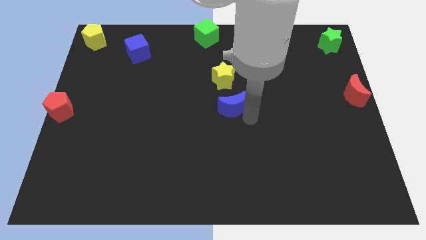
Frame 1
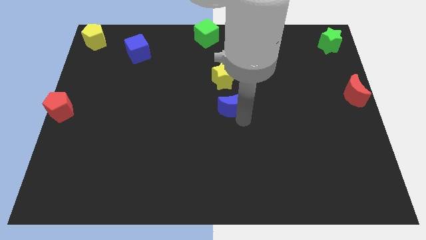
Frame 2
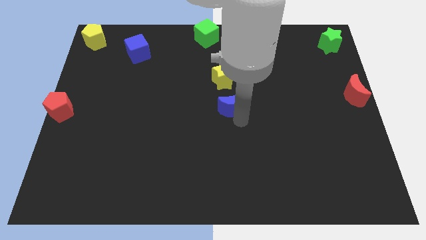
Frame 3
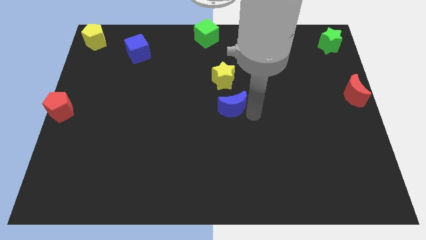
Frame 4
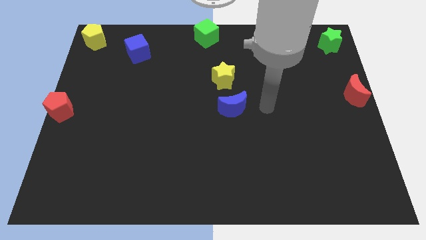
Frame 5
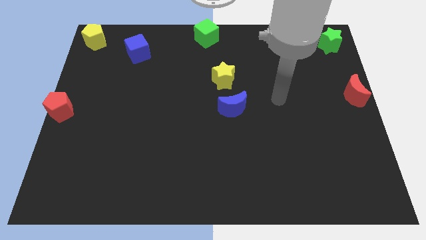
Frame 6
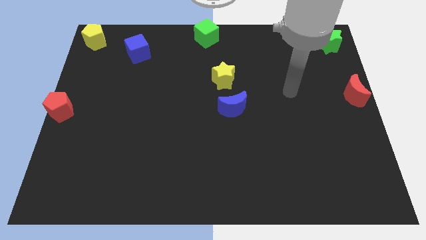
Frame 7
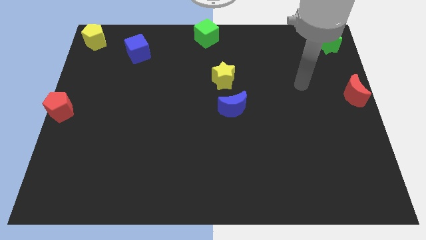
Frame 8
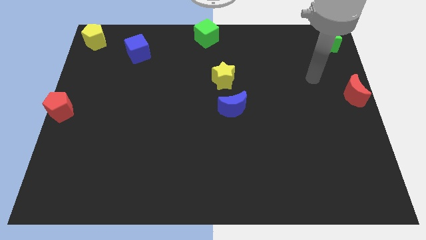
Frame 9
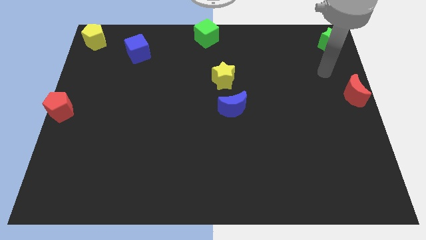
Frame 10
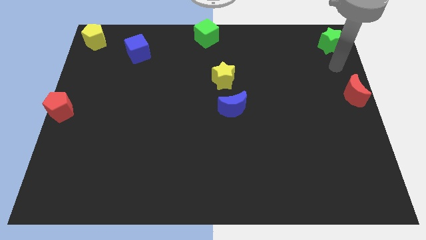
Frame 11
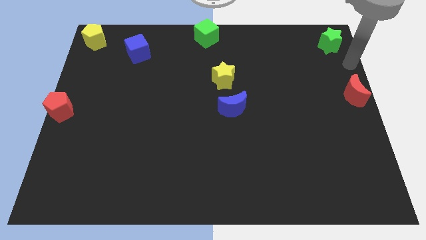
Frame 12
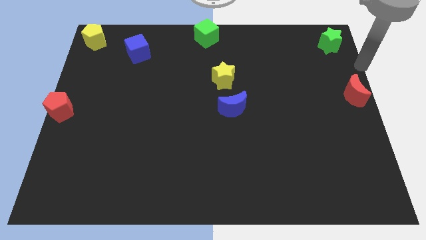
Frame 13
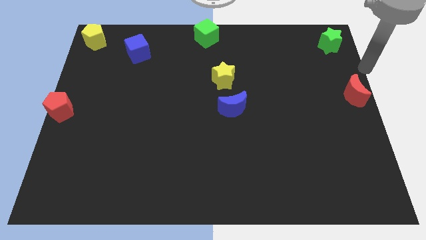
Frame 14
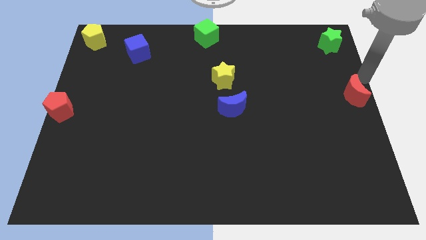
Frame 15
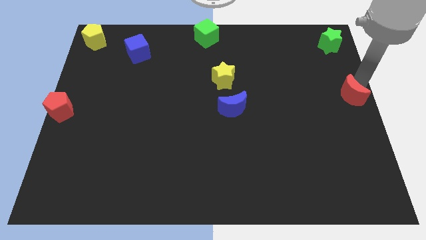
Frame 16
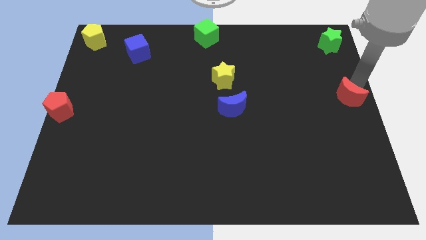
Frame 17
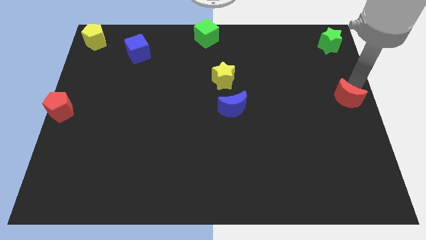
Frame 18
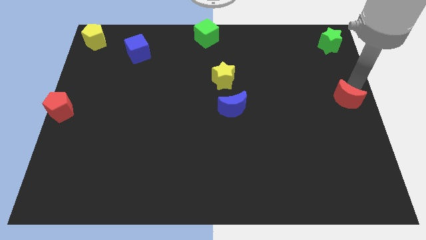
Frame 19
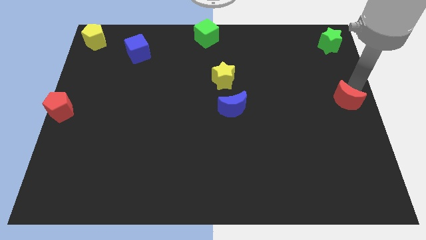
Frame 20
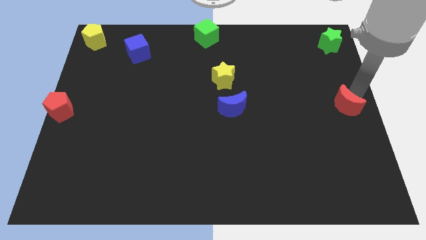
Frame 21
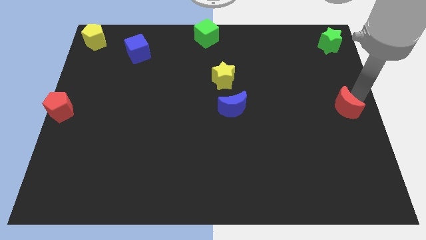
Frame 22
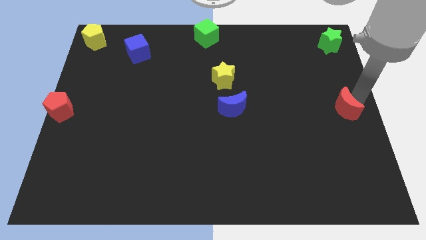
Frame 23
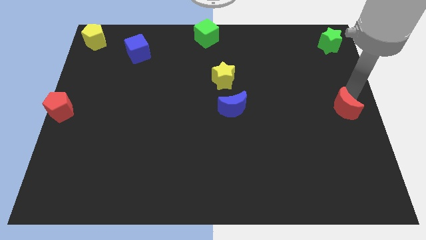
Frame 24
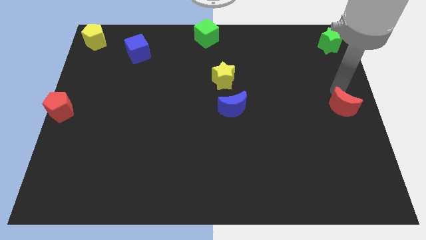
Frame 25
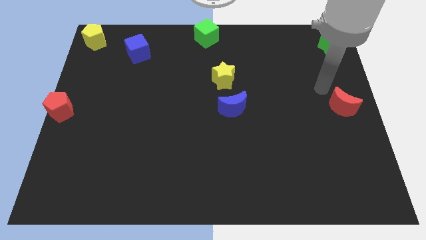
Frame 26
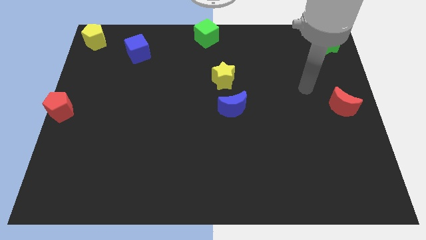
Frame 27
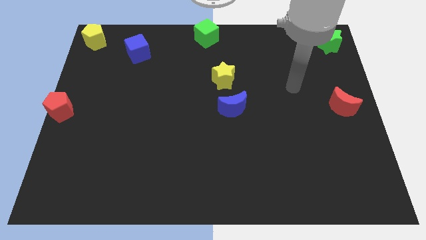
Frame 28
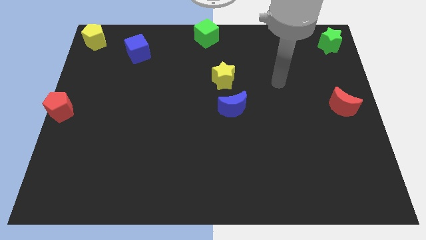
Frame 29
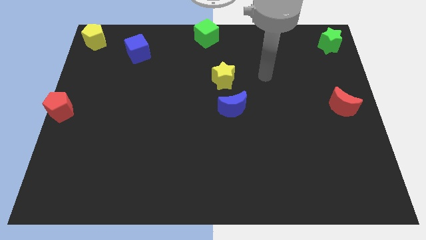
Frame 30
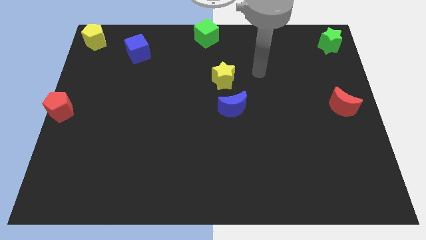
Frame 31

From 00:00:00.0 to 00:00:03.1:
adjust the red moon to the right of the blue moon

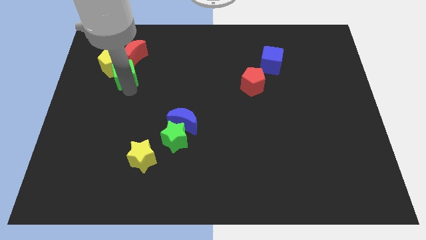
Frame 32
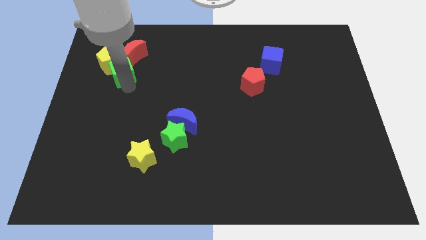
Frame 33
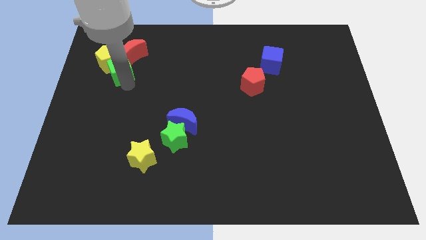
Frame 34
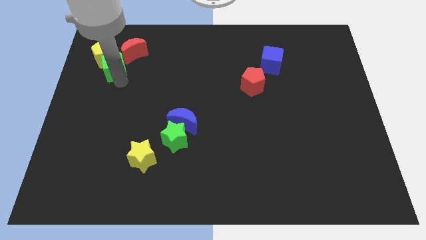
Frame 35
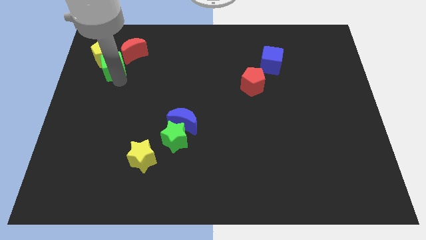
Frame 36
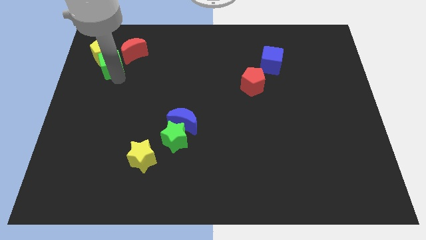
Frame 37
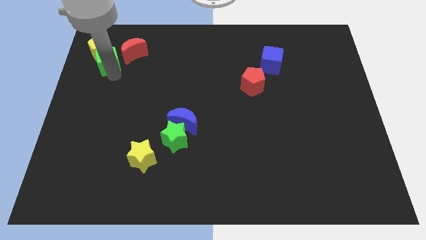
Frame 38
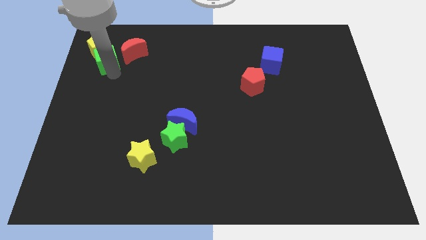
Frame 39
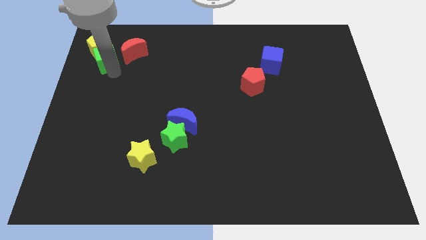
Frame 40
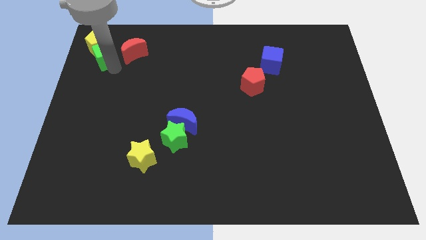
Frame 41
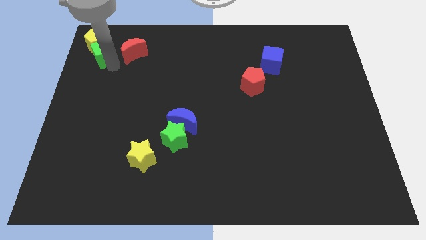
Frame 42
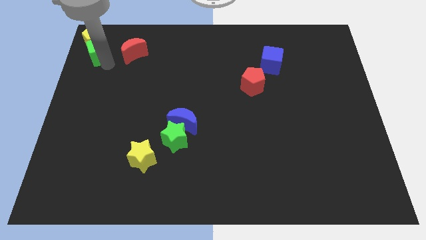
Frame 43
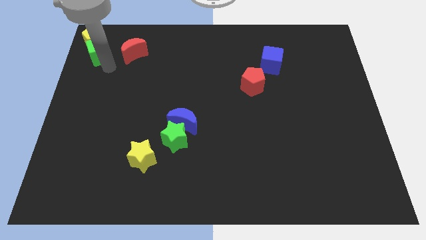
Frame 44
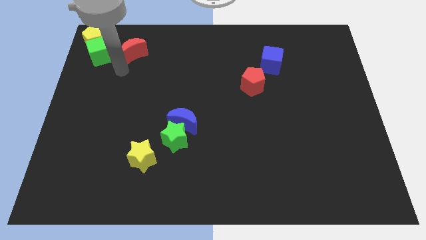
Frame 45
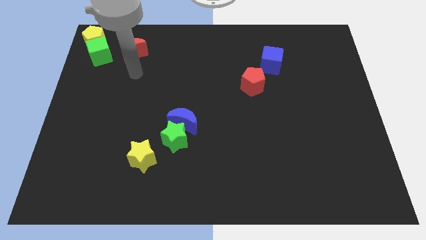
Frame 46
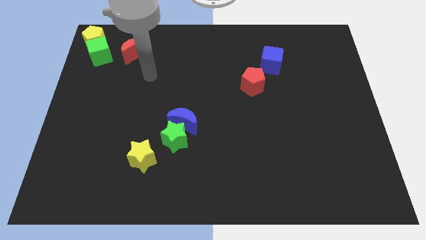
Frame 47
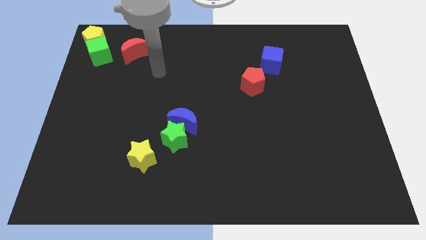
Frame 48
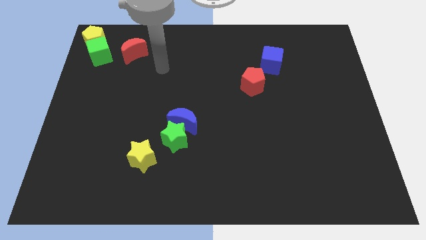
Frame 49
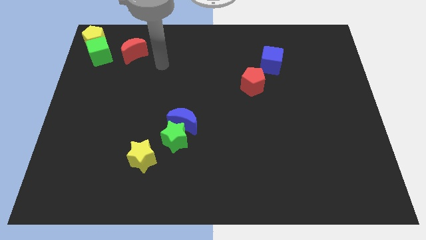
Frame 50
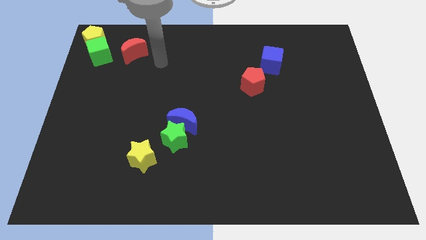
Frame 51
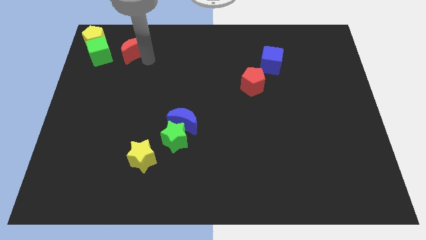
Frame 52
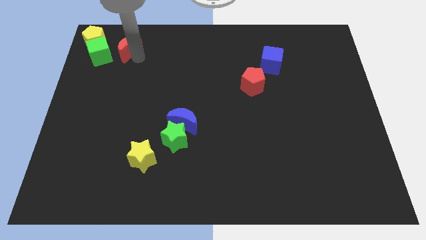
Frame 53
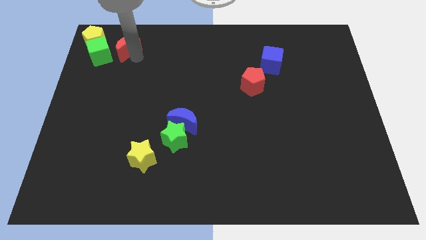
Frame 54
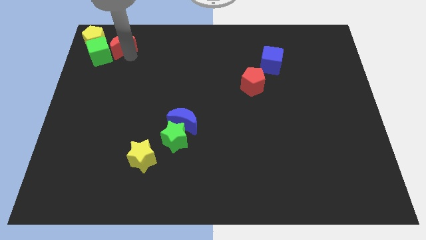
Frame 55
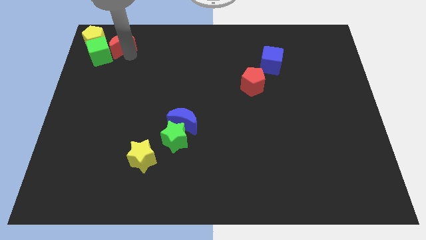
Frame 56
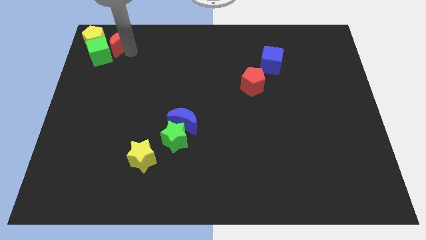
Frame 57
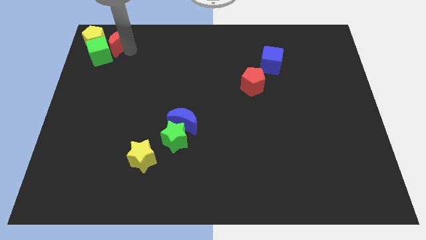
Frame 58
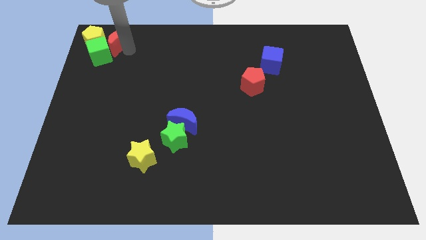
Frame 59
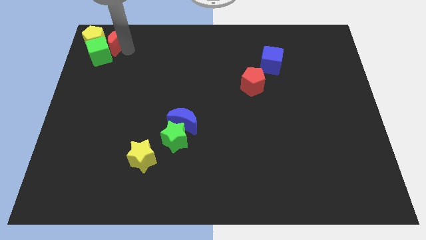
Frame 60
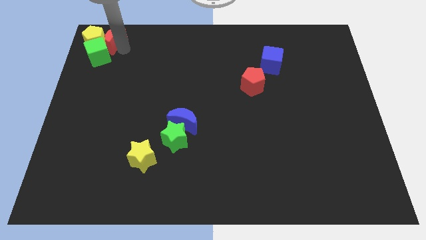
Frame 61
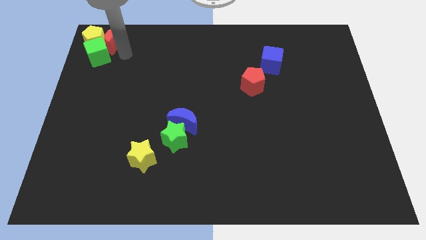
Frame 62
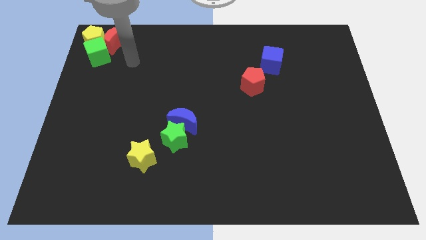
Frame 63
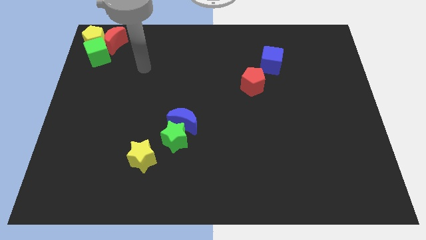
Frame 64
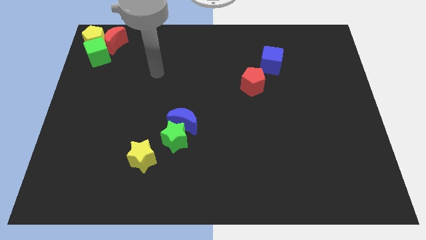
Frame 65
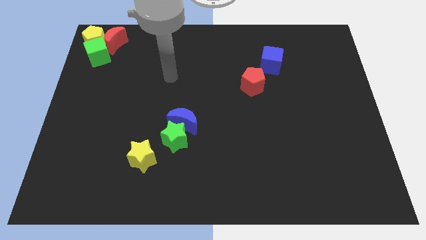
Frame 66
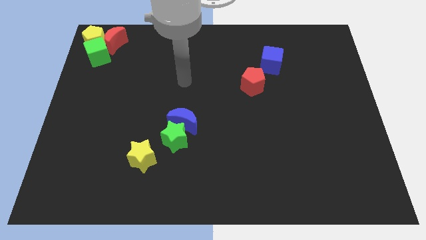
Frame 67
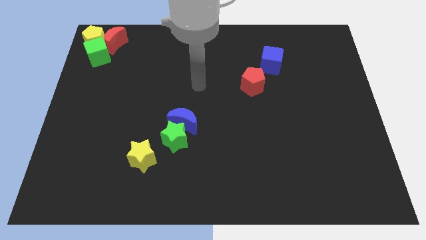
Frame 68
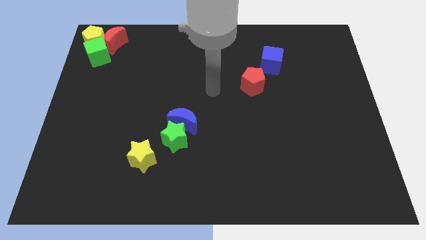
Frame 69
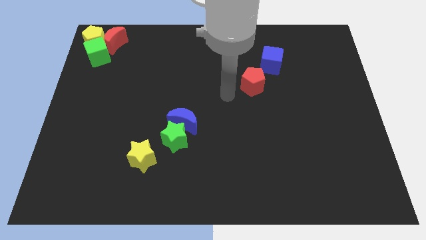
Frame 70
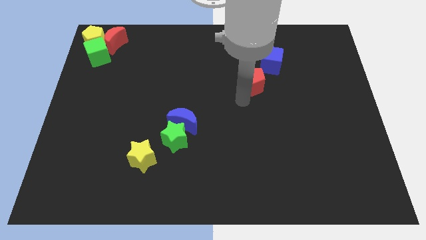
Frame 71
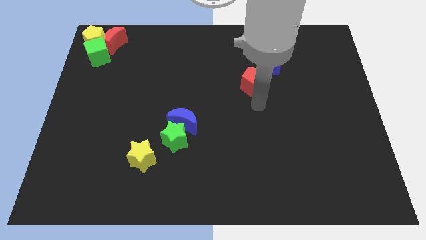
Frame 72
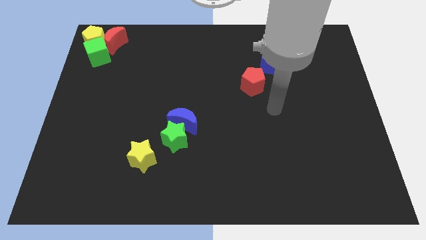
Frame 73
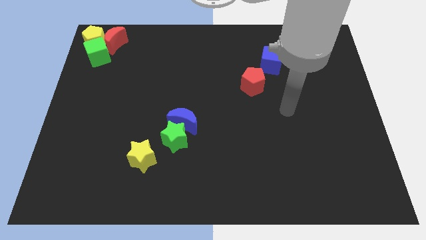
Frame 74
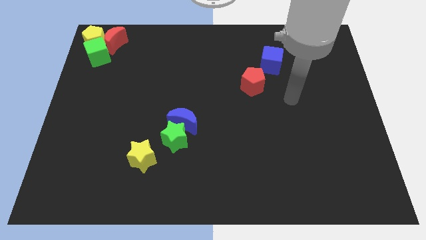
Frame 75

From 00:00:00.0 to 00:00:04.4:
move the green cubered crescent and the yellow pentagon to the top left corner of the board

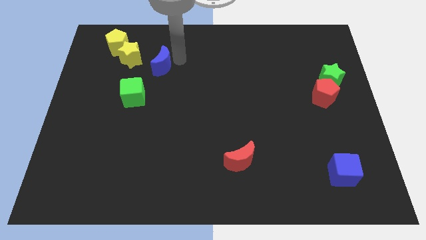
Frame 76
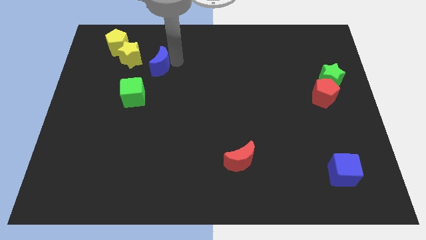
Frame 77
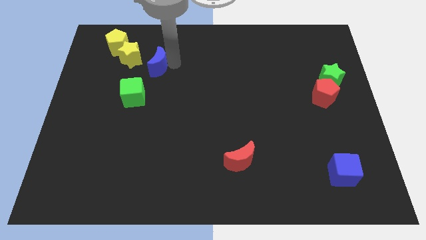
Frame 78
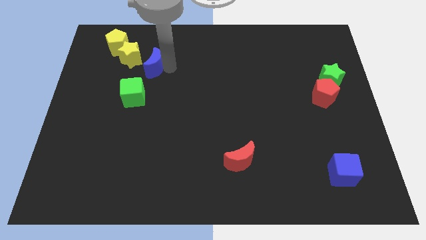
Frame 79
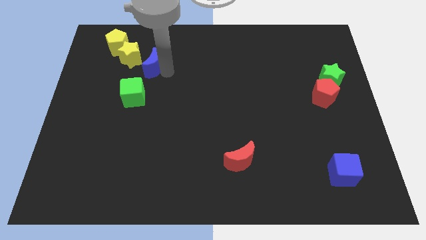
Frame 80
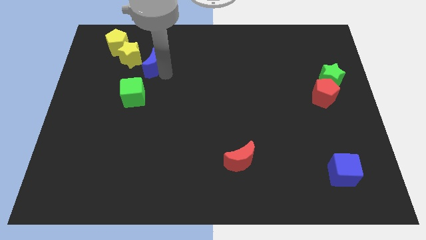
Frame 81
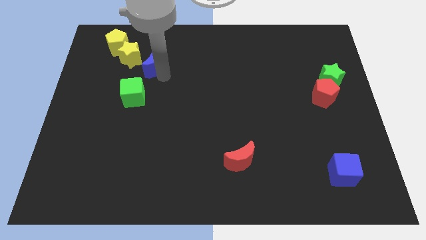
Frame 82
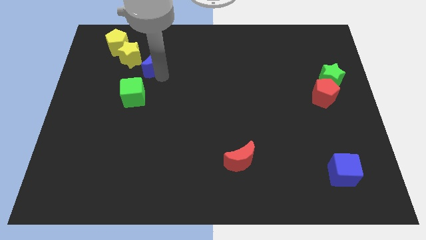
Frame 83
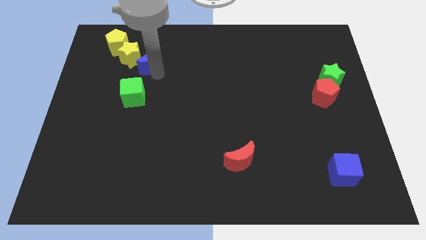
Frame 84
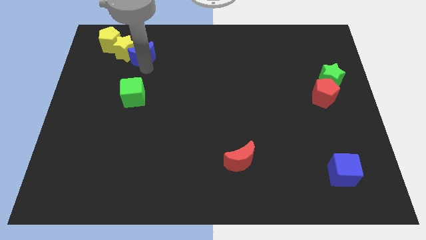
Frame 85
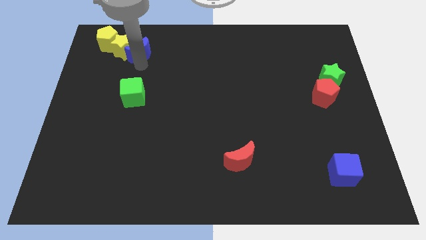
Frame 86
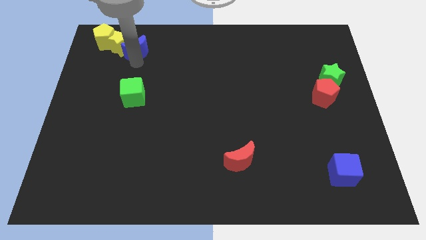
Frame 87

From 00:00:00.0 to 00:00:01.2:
push blue crescent in to yellow star

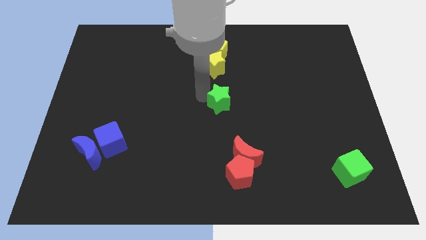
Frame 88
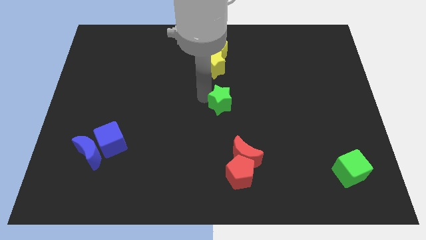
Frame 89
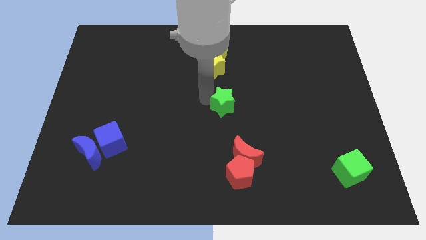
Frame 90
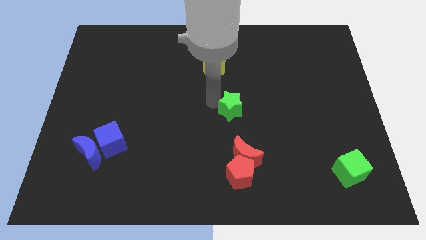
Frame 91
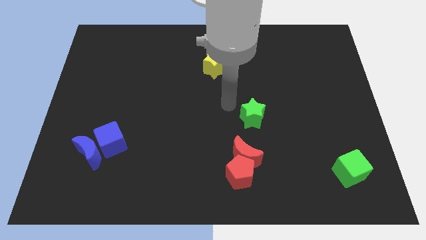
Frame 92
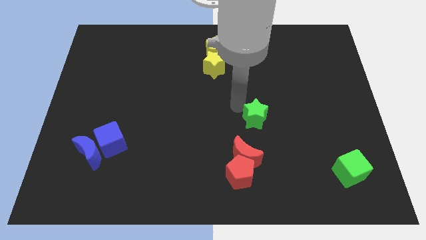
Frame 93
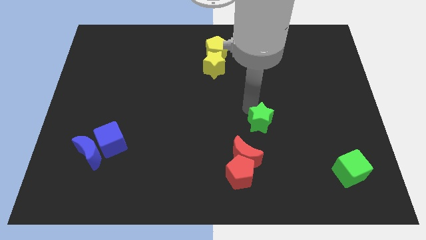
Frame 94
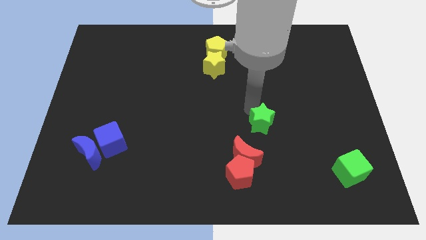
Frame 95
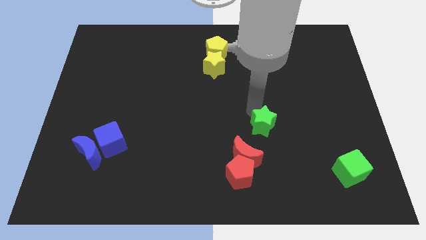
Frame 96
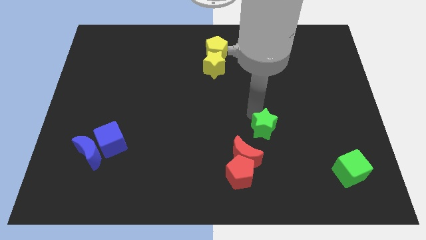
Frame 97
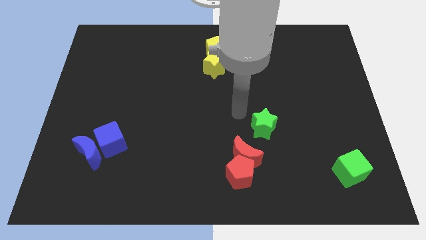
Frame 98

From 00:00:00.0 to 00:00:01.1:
push the green star diagonally to the red crescent
